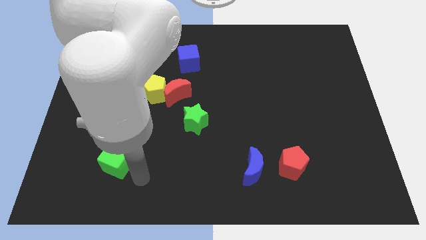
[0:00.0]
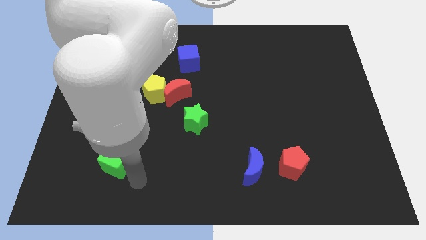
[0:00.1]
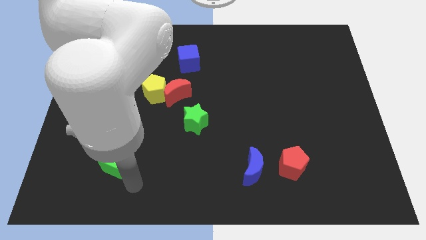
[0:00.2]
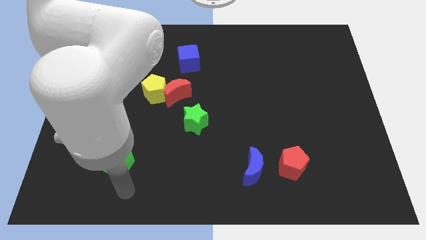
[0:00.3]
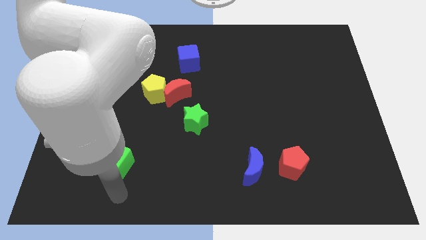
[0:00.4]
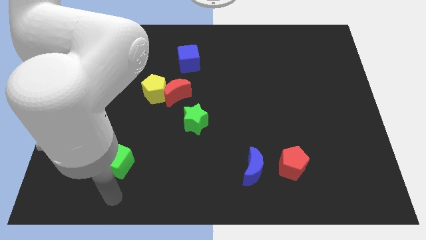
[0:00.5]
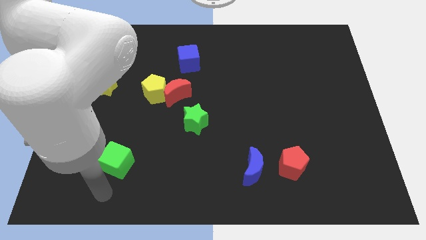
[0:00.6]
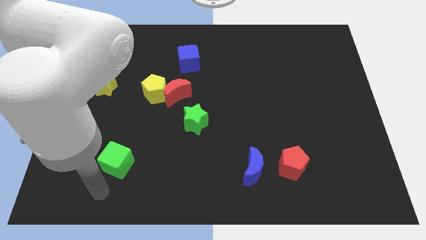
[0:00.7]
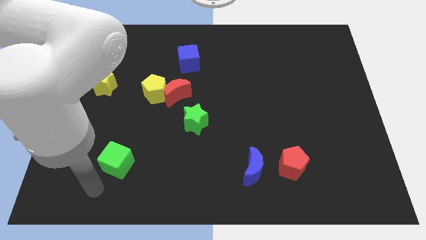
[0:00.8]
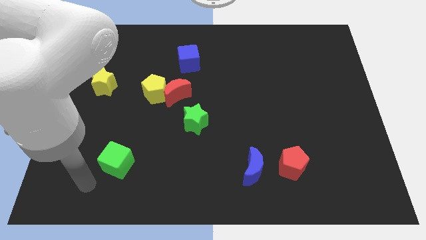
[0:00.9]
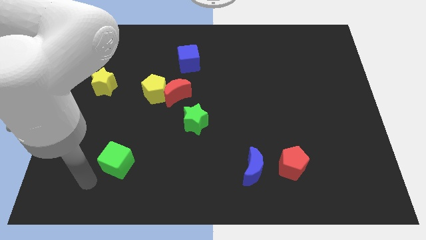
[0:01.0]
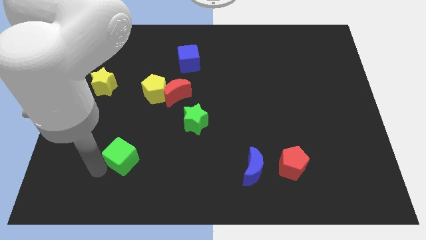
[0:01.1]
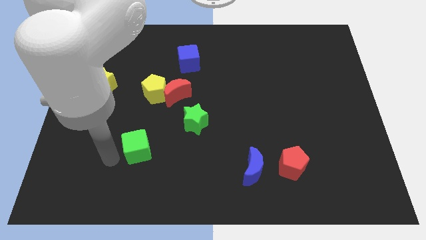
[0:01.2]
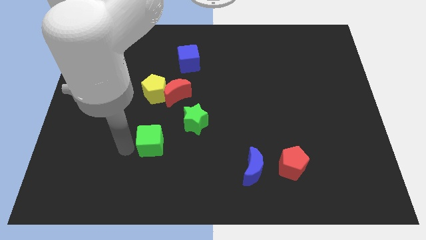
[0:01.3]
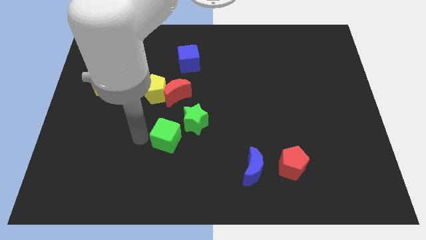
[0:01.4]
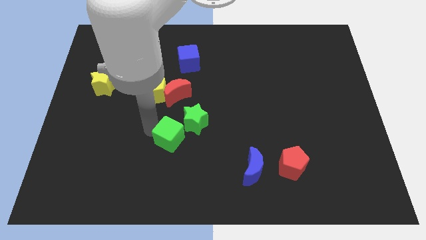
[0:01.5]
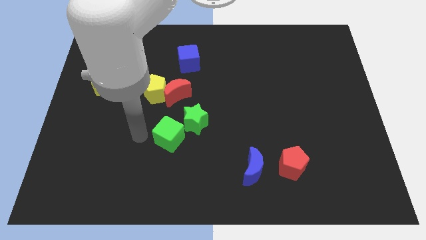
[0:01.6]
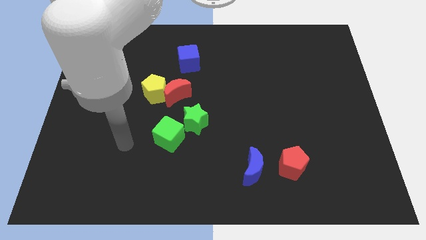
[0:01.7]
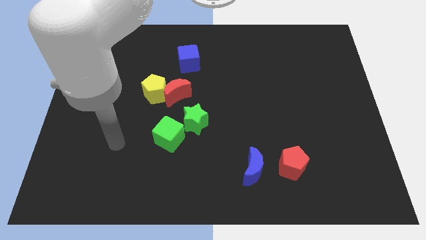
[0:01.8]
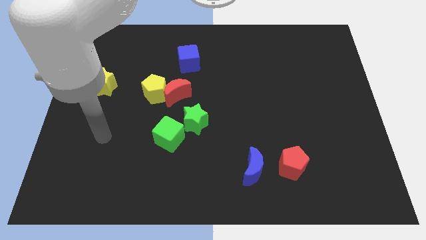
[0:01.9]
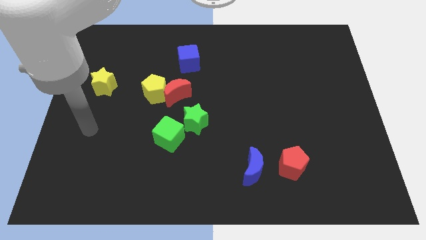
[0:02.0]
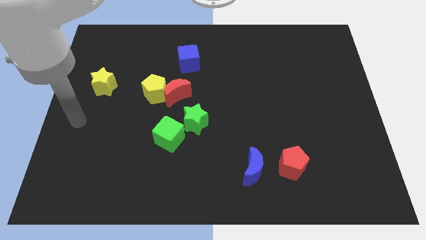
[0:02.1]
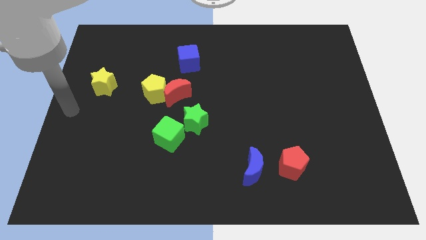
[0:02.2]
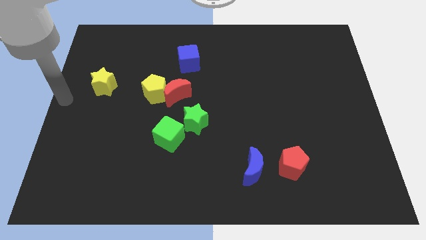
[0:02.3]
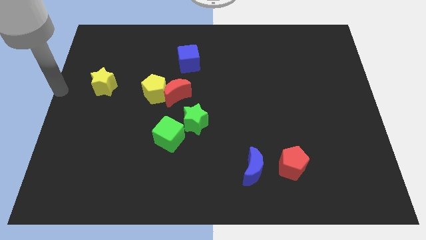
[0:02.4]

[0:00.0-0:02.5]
push the green cube close to the green star and go away

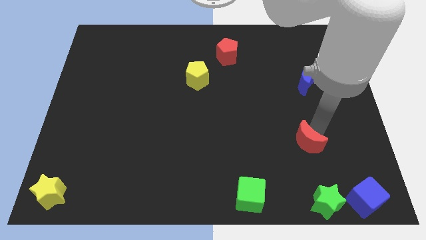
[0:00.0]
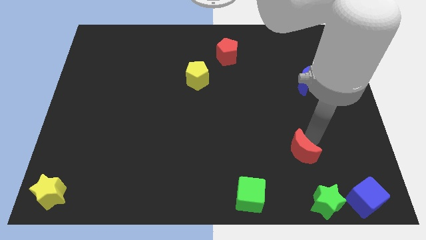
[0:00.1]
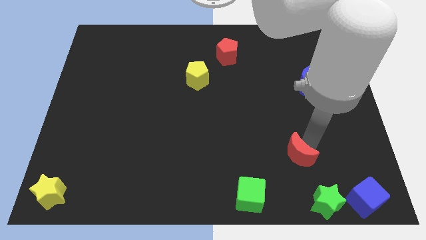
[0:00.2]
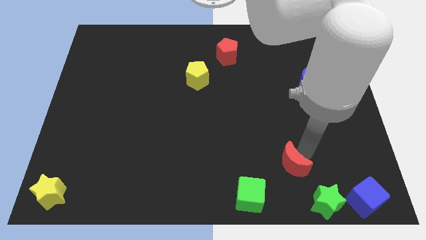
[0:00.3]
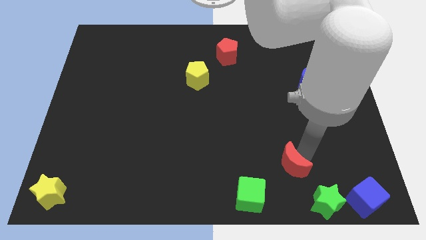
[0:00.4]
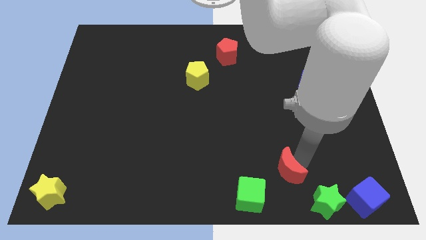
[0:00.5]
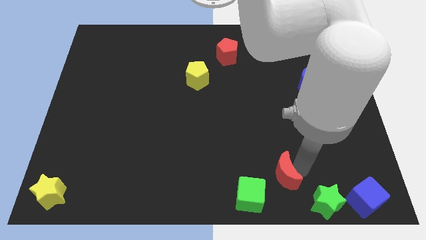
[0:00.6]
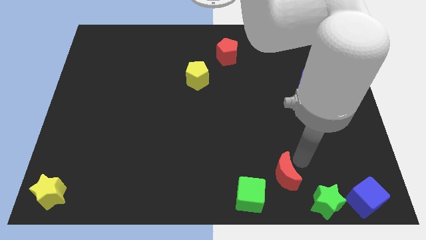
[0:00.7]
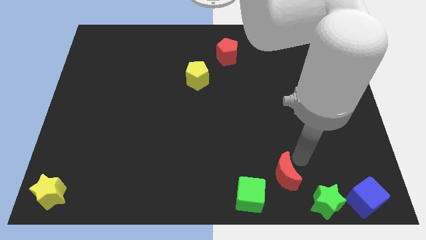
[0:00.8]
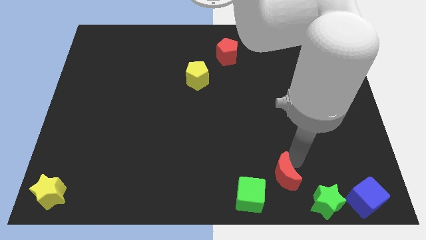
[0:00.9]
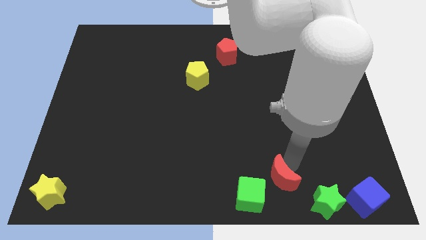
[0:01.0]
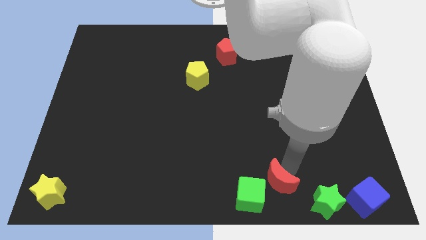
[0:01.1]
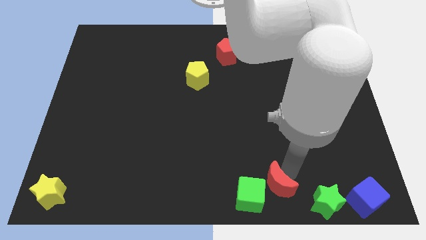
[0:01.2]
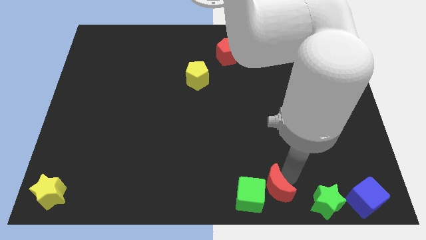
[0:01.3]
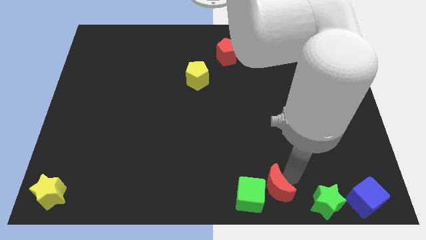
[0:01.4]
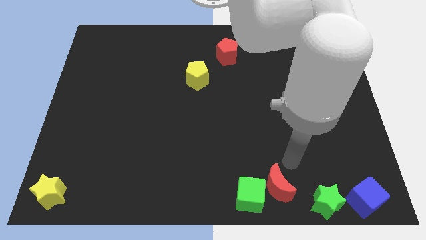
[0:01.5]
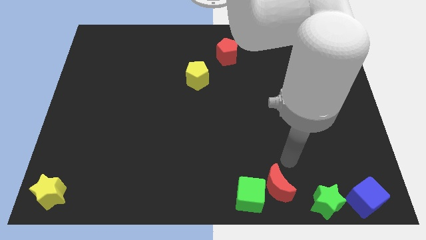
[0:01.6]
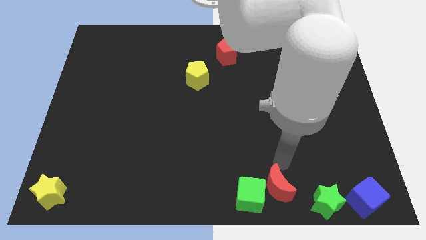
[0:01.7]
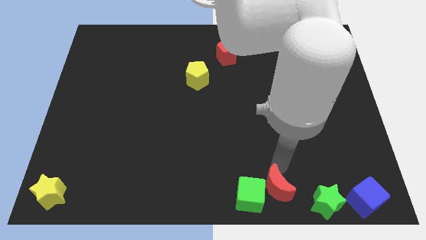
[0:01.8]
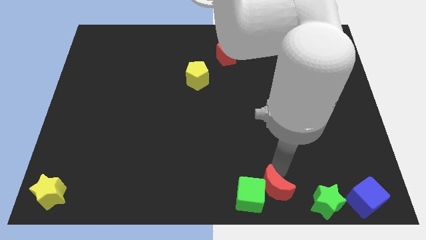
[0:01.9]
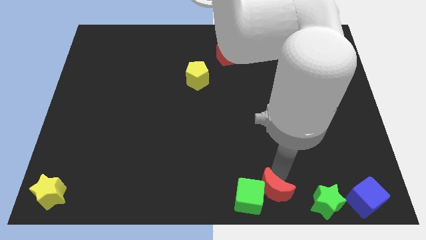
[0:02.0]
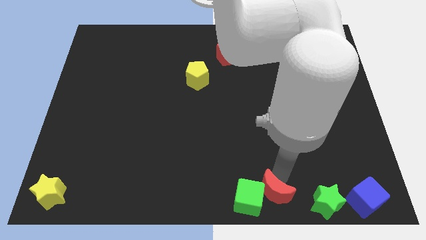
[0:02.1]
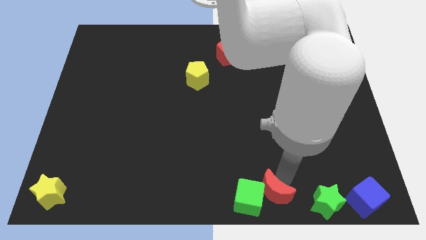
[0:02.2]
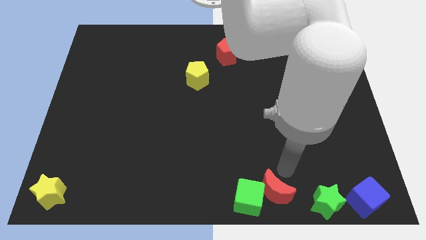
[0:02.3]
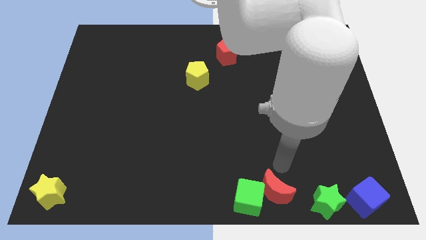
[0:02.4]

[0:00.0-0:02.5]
drag the red moon close to the green cube

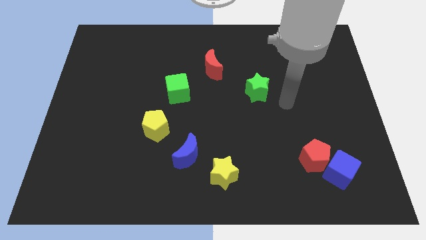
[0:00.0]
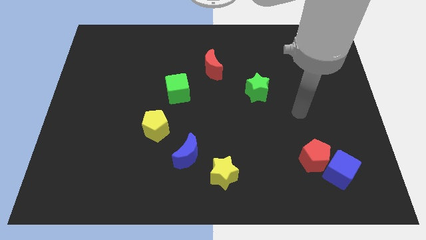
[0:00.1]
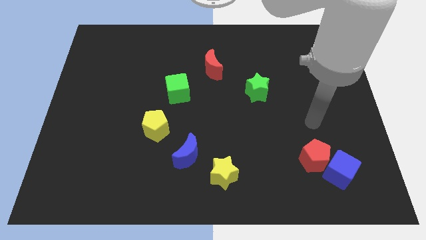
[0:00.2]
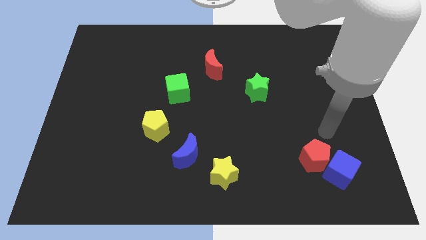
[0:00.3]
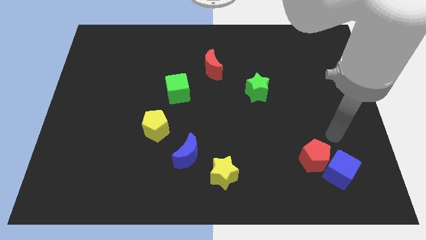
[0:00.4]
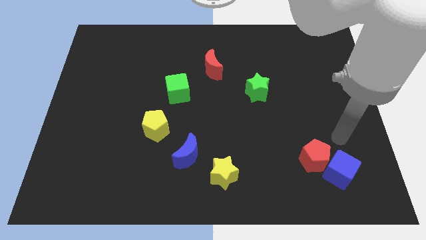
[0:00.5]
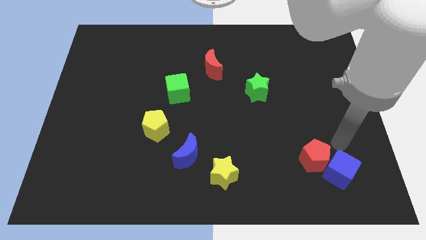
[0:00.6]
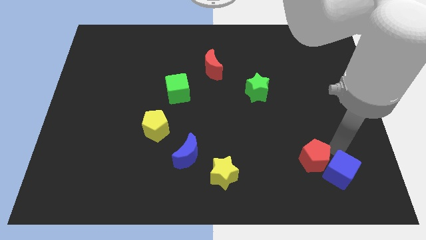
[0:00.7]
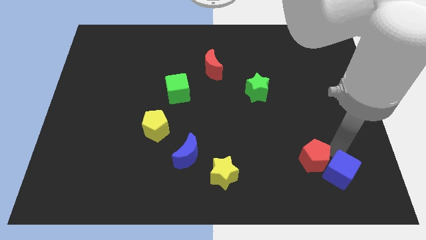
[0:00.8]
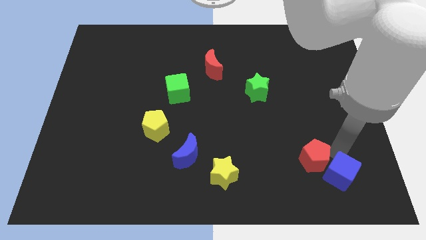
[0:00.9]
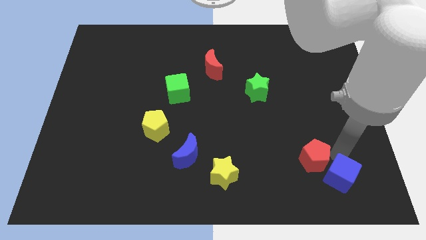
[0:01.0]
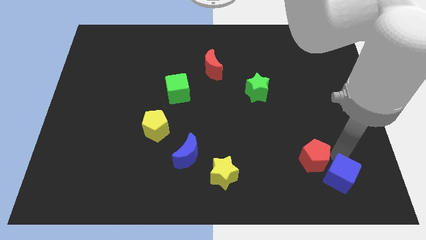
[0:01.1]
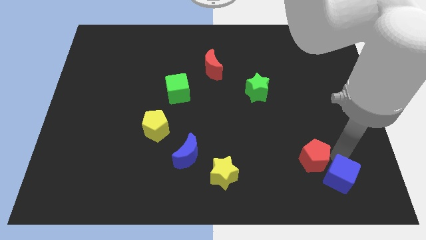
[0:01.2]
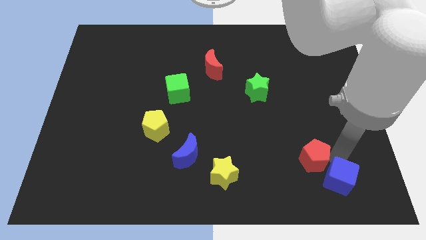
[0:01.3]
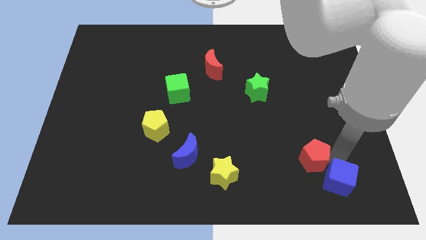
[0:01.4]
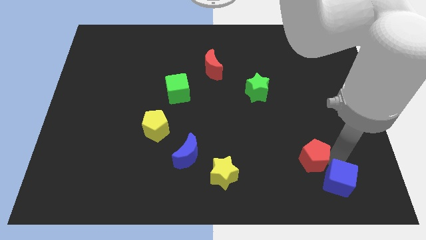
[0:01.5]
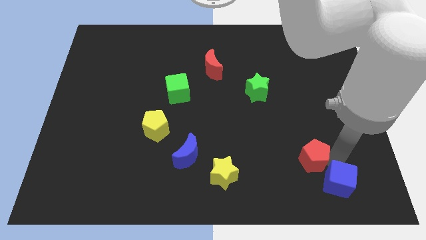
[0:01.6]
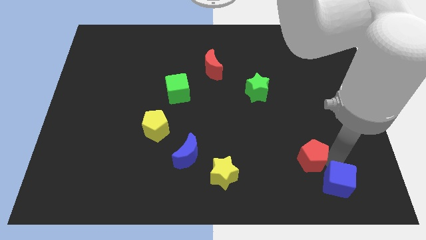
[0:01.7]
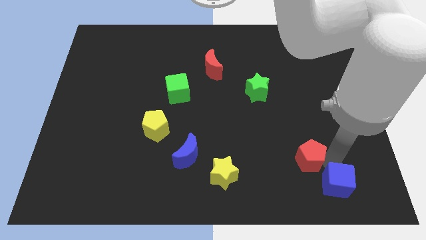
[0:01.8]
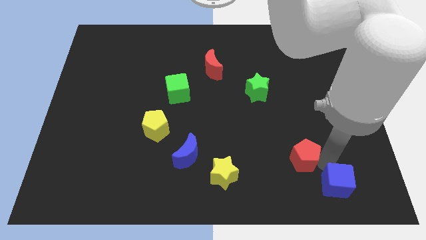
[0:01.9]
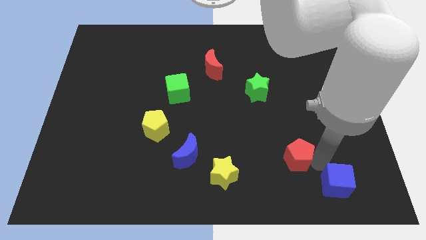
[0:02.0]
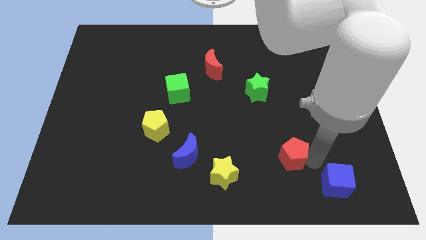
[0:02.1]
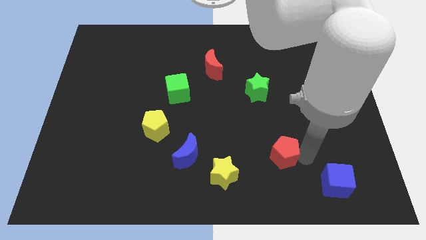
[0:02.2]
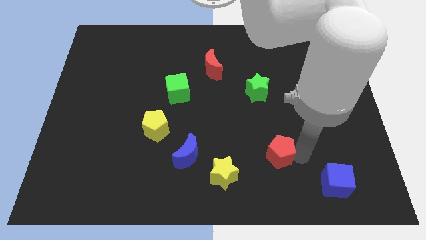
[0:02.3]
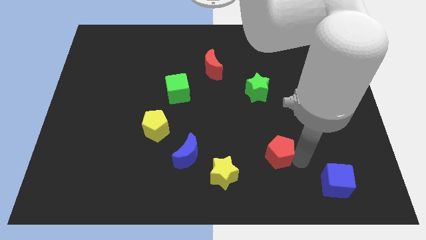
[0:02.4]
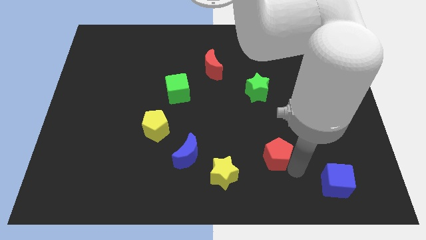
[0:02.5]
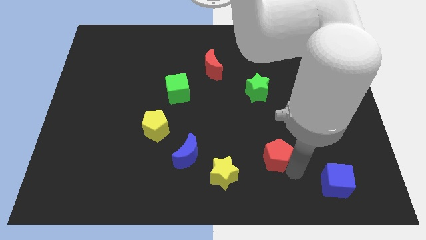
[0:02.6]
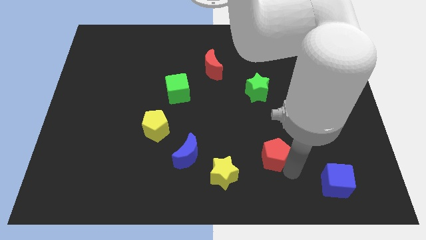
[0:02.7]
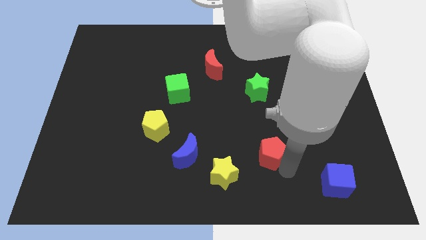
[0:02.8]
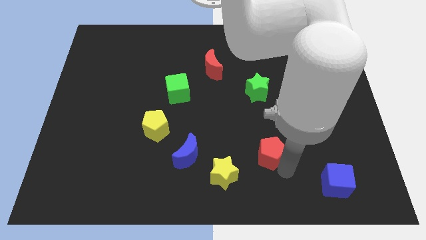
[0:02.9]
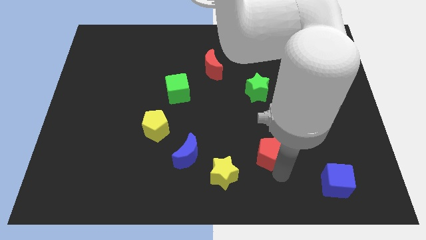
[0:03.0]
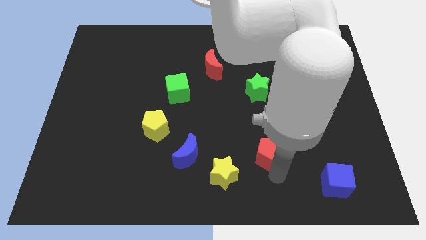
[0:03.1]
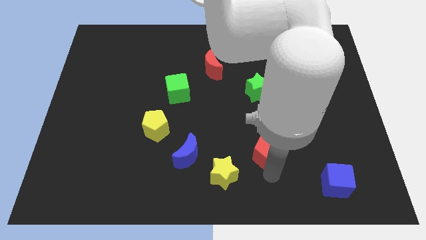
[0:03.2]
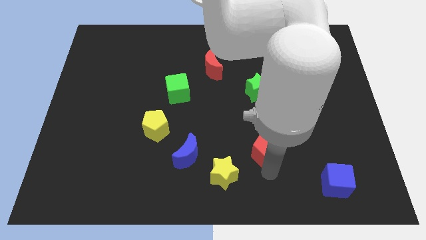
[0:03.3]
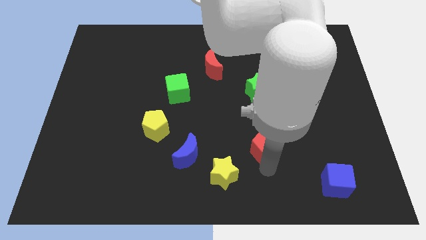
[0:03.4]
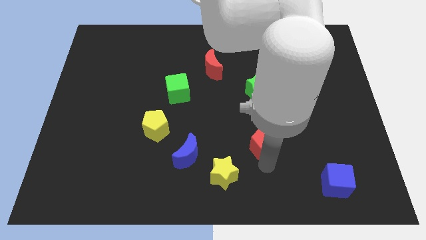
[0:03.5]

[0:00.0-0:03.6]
separate the red pentagon and blue cube from each other

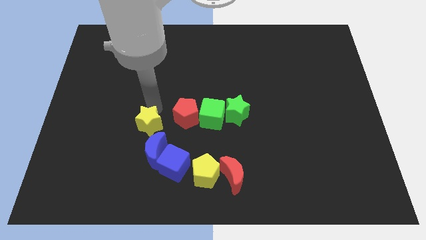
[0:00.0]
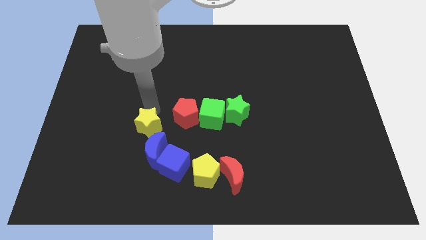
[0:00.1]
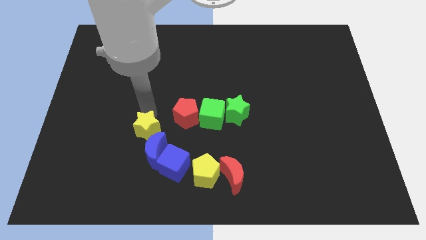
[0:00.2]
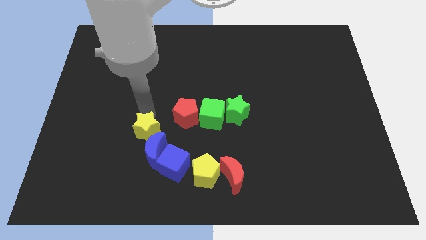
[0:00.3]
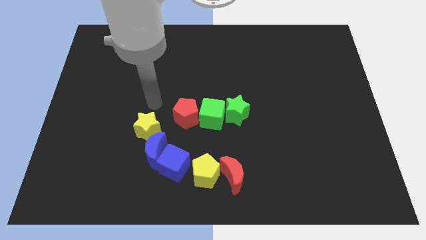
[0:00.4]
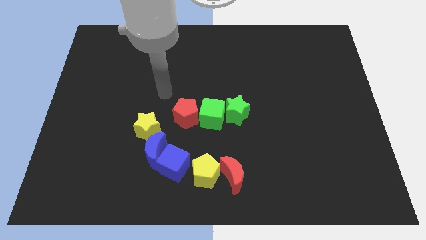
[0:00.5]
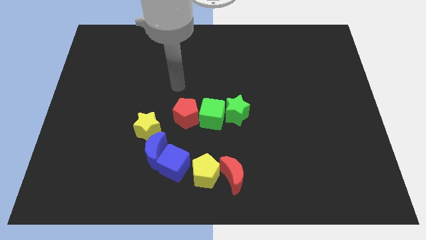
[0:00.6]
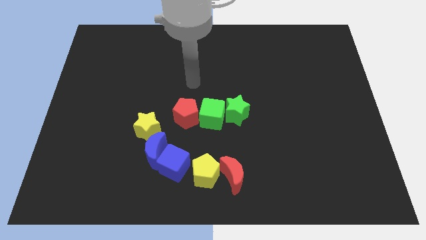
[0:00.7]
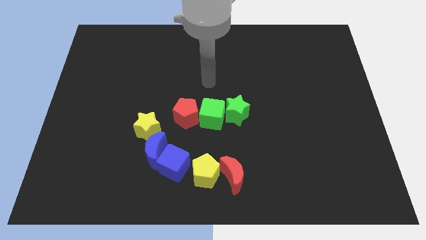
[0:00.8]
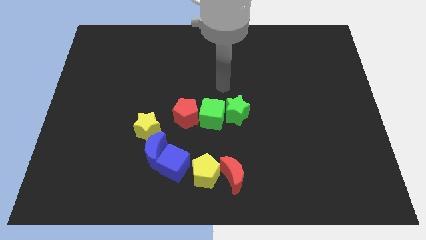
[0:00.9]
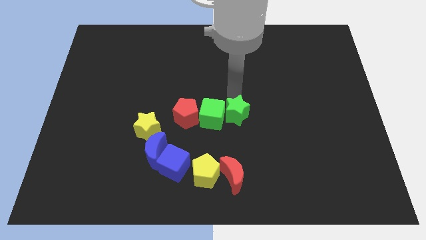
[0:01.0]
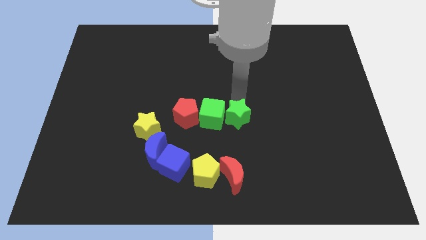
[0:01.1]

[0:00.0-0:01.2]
touch the top side of the green star
